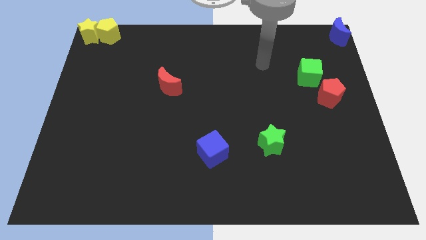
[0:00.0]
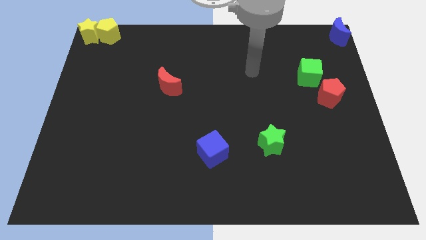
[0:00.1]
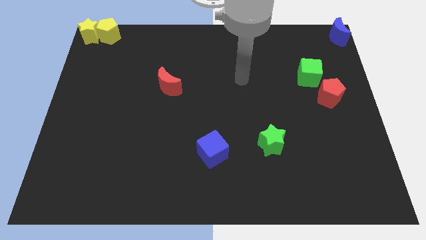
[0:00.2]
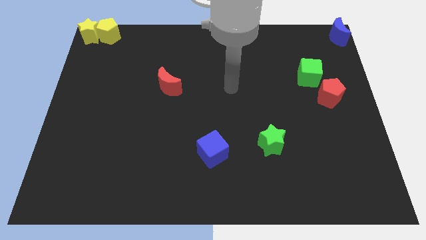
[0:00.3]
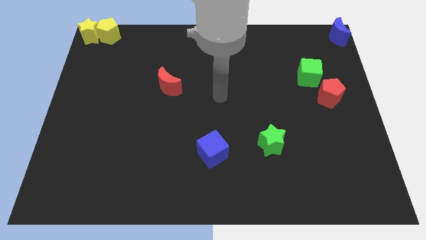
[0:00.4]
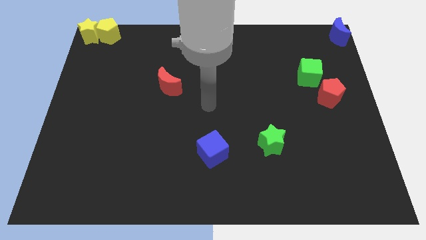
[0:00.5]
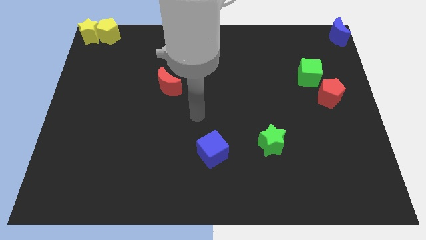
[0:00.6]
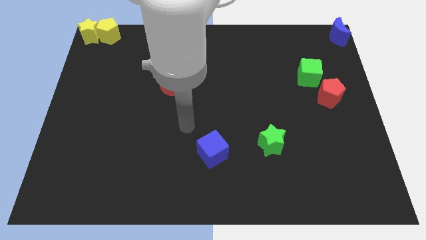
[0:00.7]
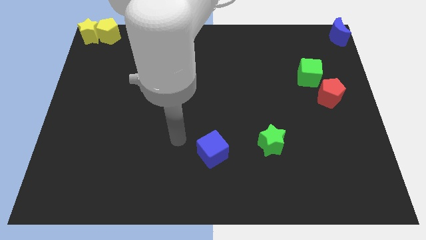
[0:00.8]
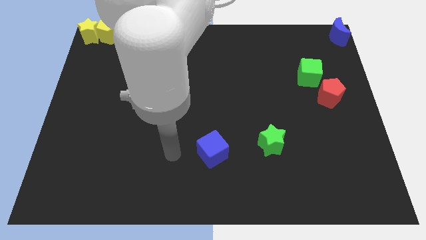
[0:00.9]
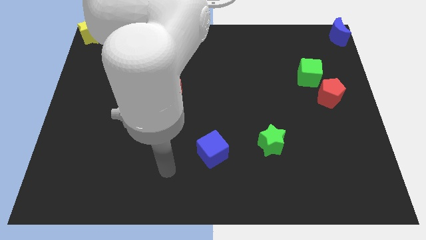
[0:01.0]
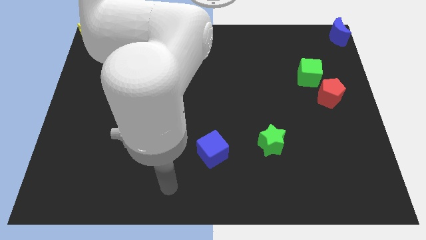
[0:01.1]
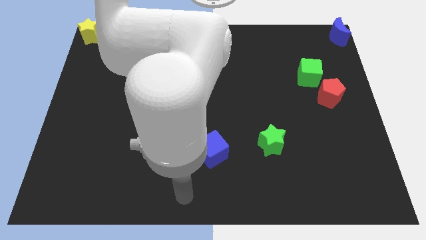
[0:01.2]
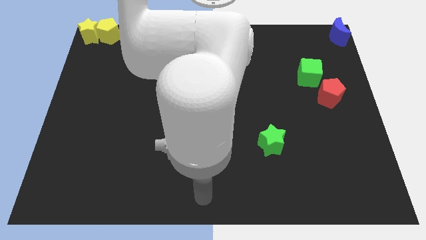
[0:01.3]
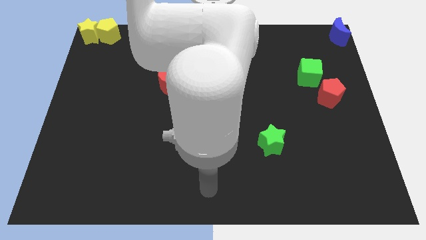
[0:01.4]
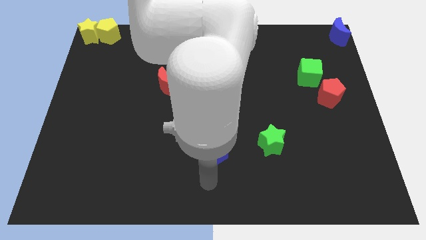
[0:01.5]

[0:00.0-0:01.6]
move arm to the bottom of the blue cube

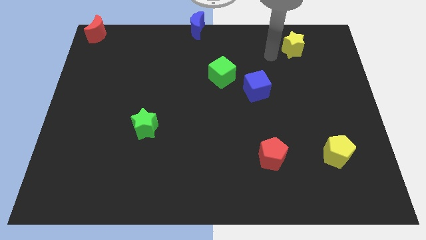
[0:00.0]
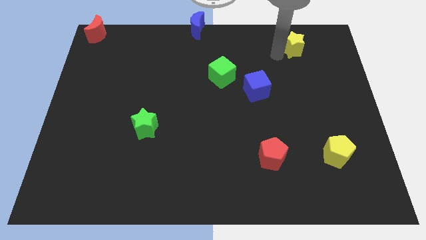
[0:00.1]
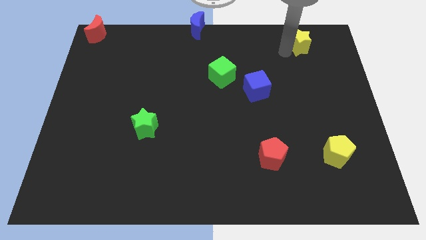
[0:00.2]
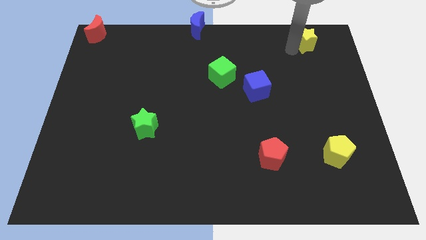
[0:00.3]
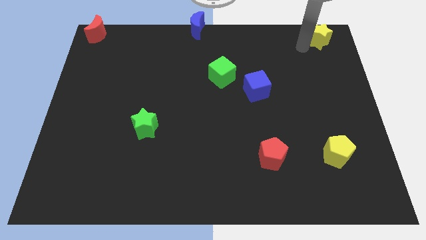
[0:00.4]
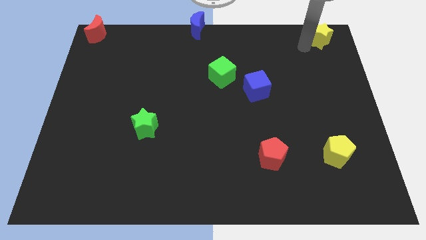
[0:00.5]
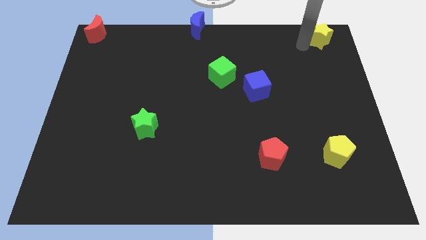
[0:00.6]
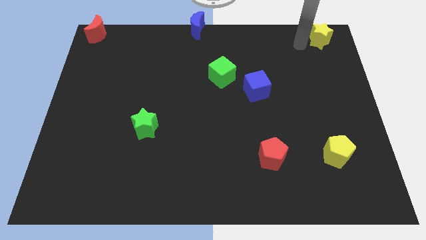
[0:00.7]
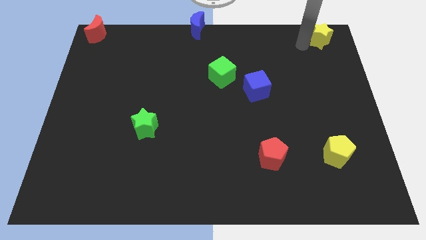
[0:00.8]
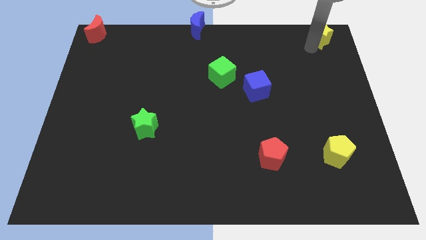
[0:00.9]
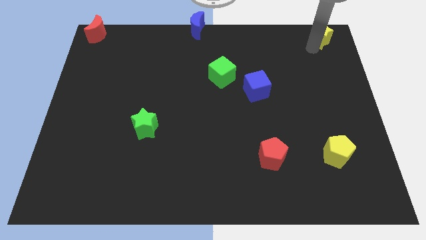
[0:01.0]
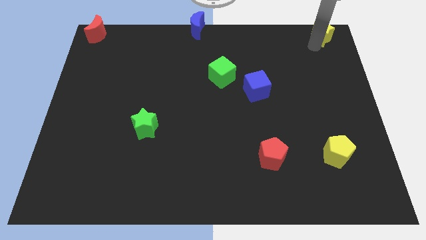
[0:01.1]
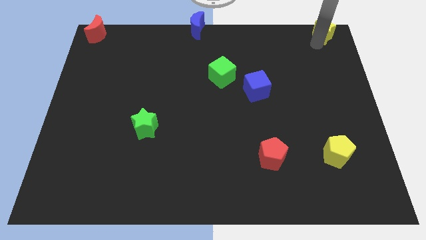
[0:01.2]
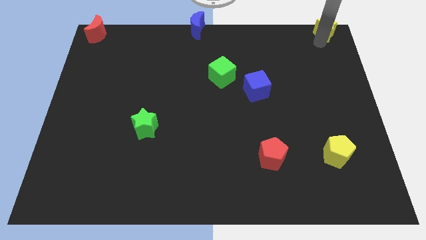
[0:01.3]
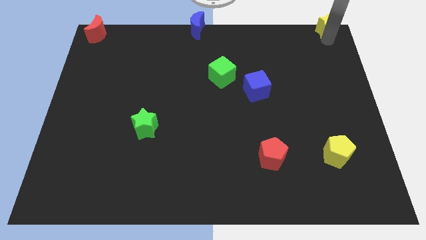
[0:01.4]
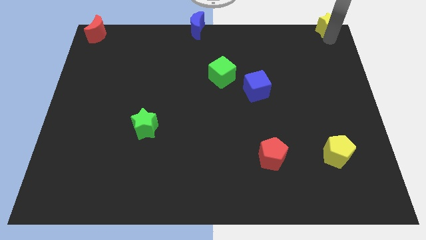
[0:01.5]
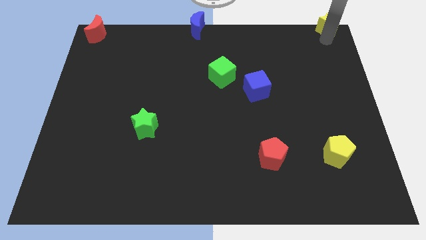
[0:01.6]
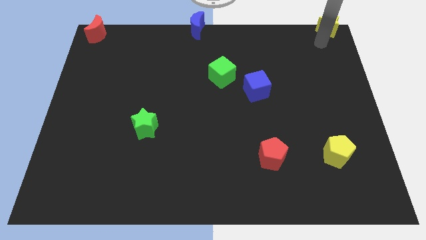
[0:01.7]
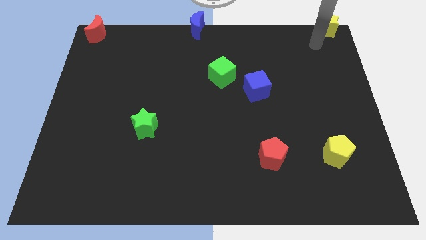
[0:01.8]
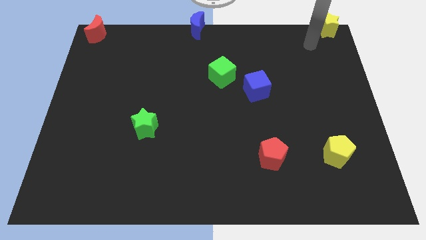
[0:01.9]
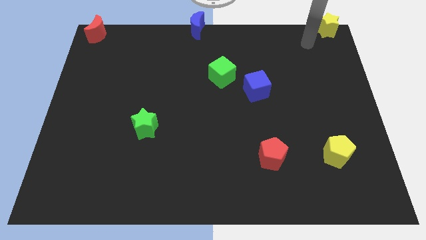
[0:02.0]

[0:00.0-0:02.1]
push yellow star to the top right

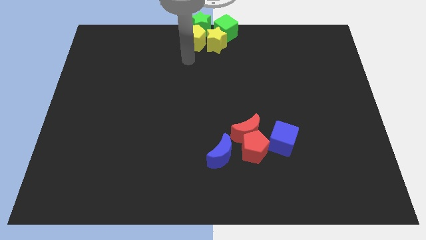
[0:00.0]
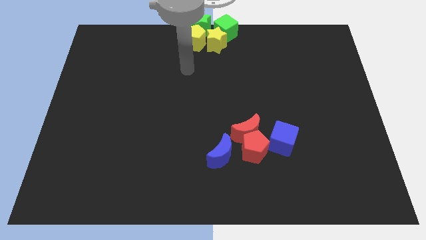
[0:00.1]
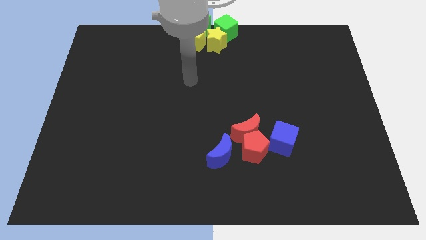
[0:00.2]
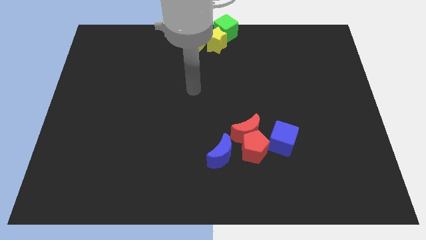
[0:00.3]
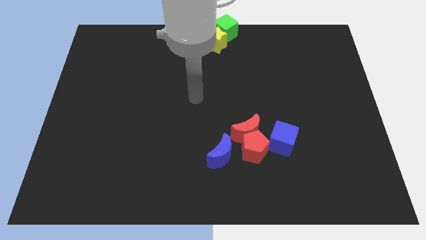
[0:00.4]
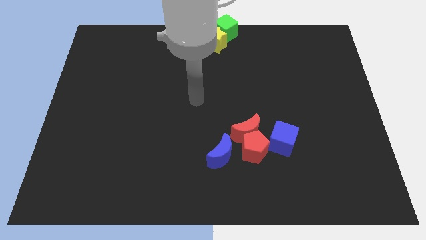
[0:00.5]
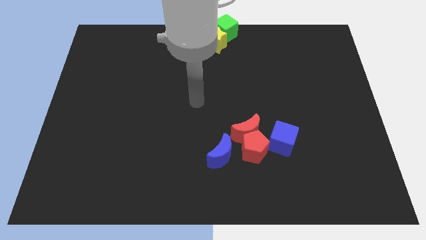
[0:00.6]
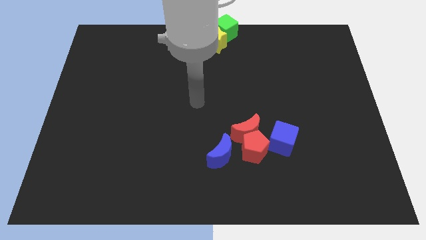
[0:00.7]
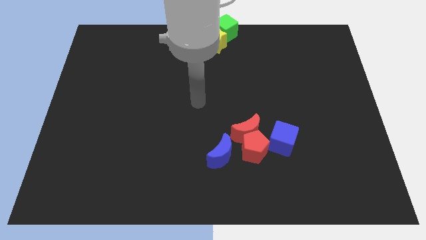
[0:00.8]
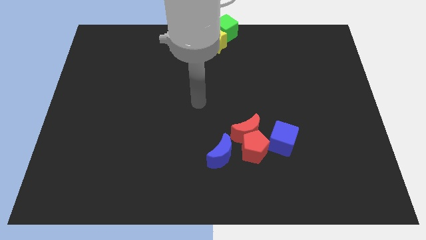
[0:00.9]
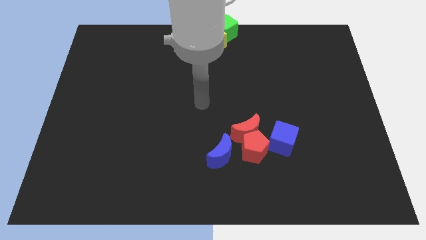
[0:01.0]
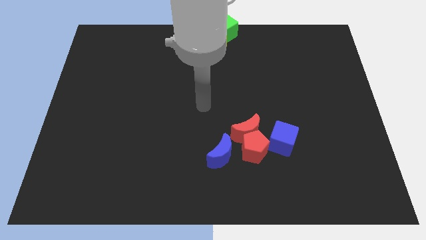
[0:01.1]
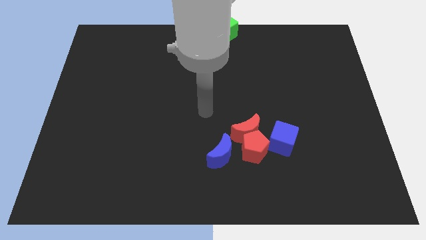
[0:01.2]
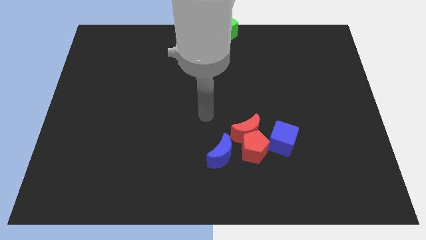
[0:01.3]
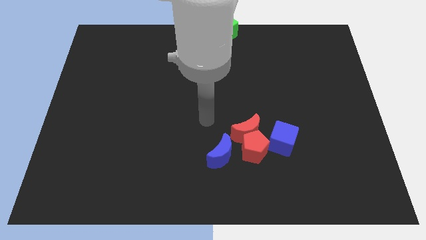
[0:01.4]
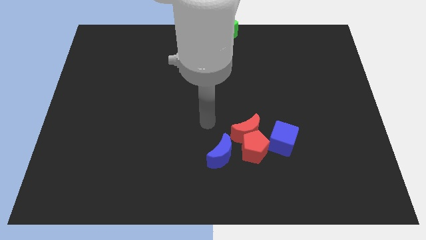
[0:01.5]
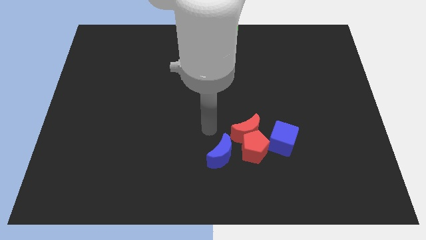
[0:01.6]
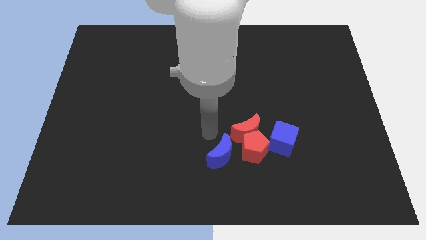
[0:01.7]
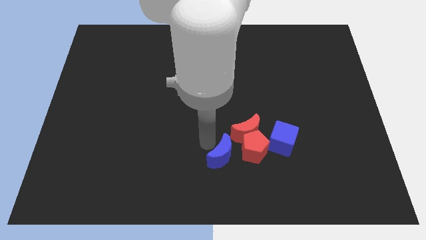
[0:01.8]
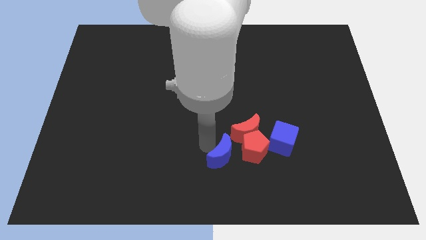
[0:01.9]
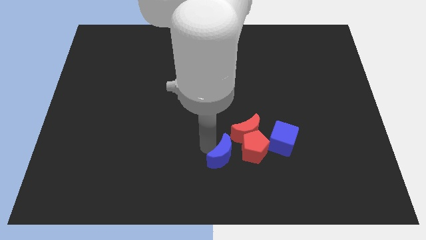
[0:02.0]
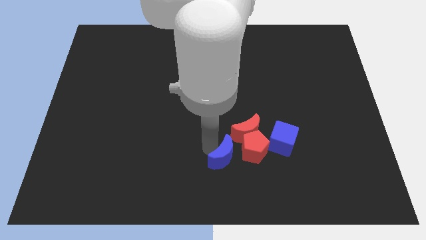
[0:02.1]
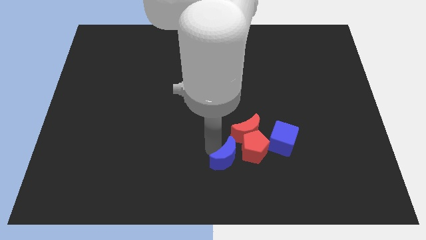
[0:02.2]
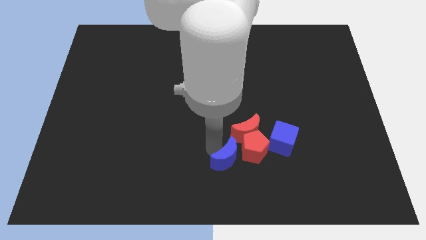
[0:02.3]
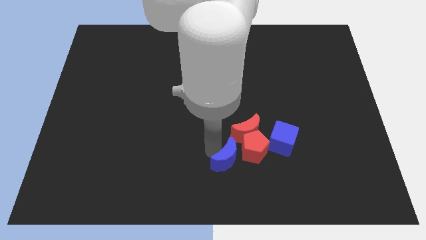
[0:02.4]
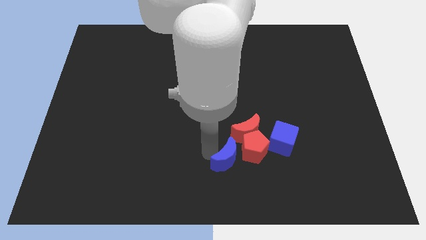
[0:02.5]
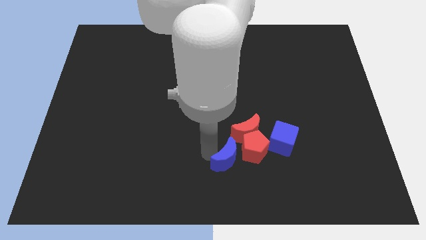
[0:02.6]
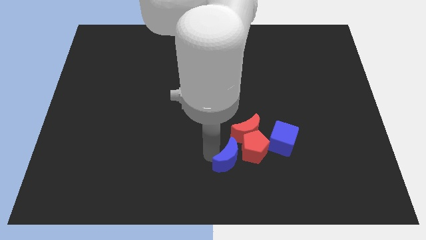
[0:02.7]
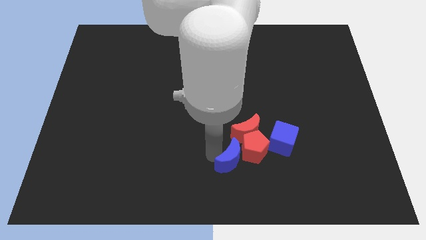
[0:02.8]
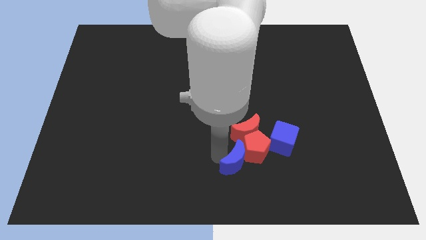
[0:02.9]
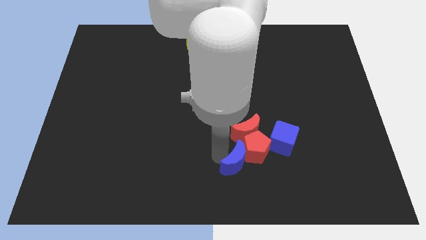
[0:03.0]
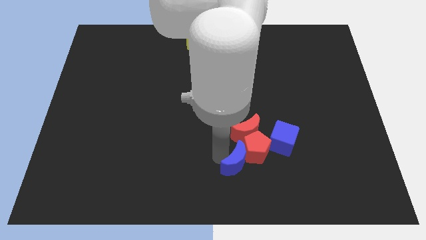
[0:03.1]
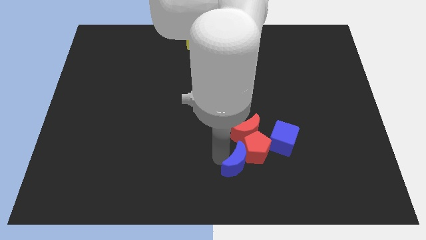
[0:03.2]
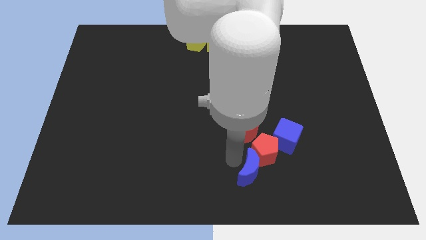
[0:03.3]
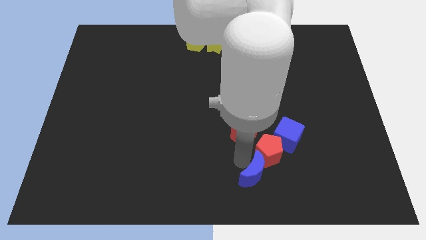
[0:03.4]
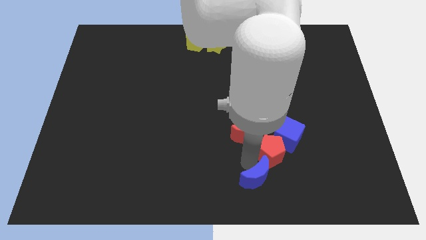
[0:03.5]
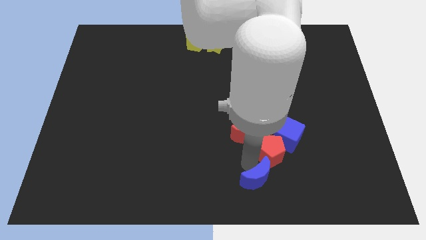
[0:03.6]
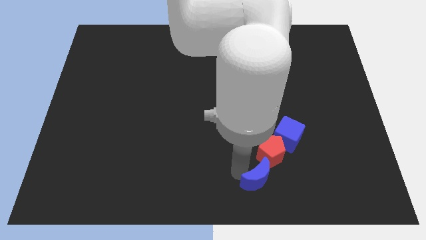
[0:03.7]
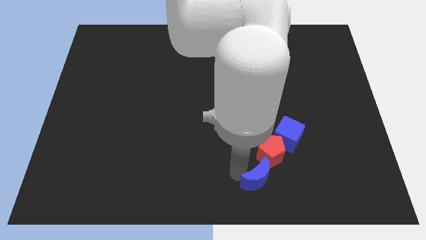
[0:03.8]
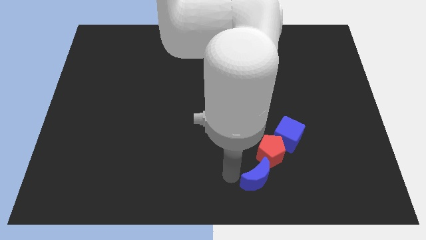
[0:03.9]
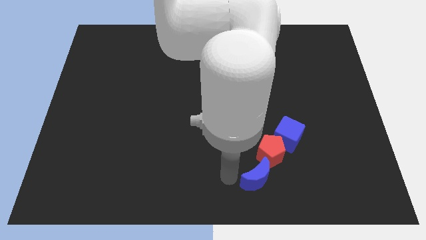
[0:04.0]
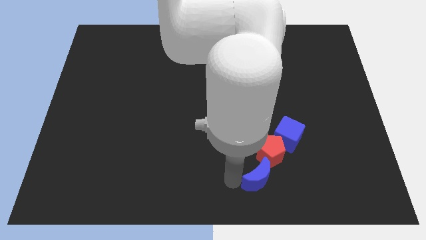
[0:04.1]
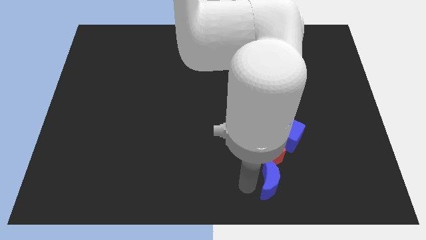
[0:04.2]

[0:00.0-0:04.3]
push the blue crescent to the bottom of the red pentagon

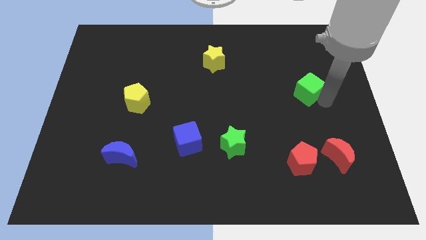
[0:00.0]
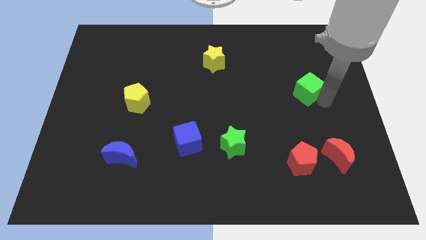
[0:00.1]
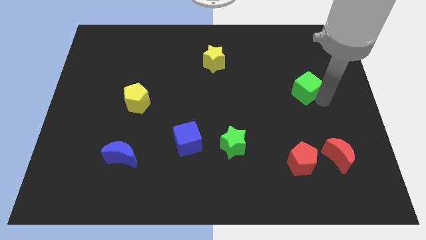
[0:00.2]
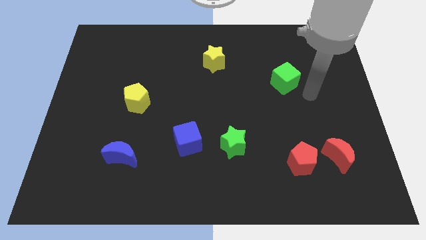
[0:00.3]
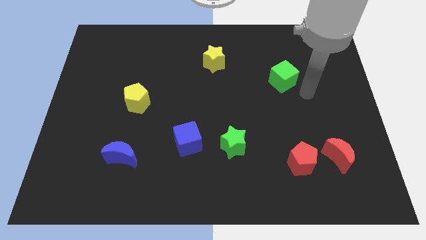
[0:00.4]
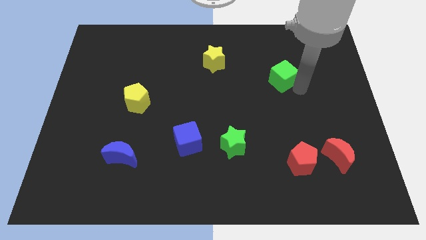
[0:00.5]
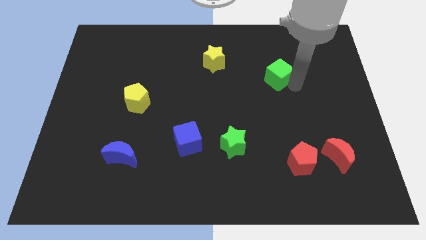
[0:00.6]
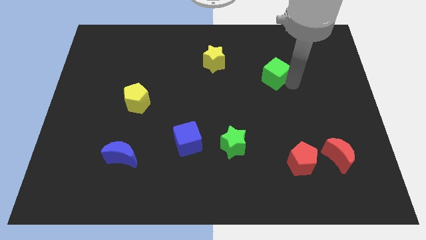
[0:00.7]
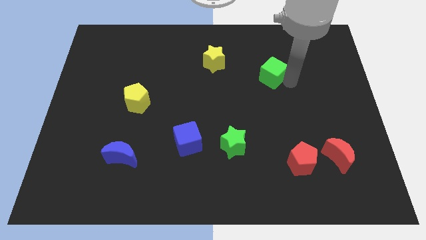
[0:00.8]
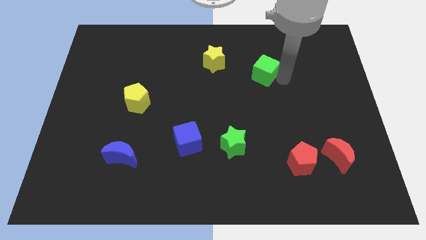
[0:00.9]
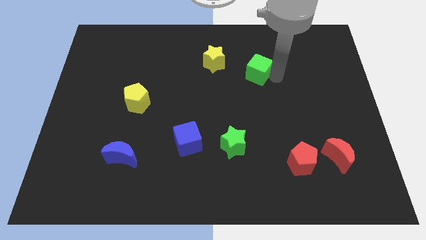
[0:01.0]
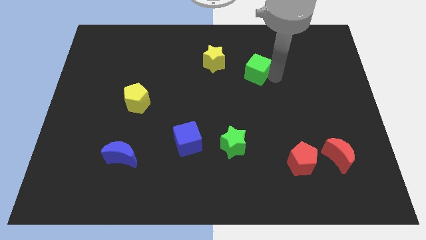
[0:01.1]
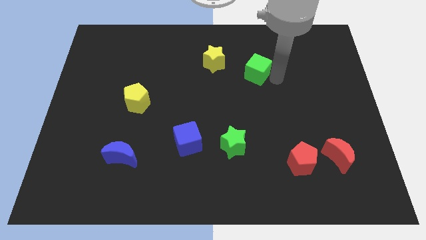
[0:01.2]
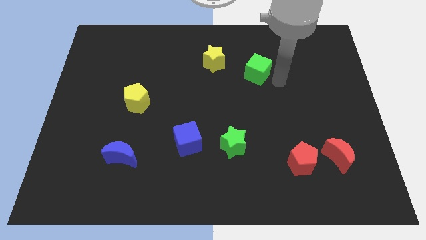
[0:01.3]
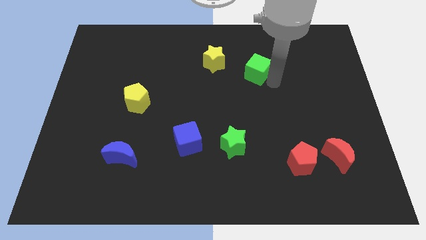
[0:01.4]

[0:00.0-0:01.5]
push the green cube towards the yellow star
